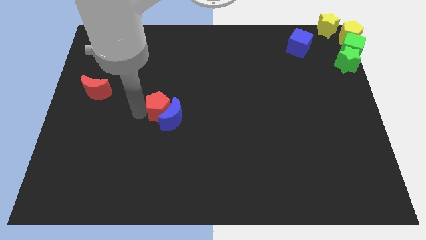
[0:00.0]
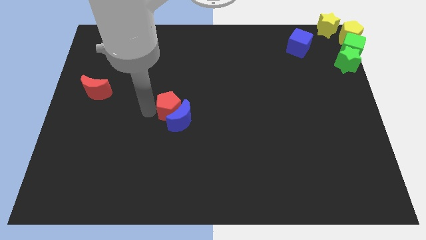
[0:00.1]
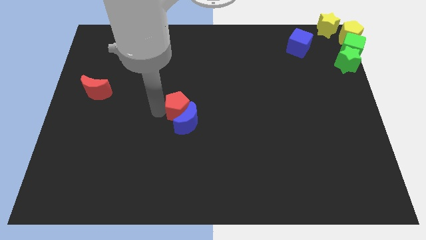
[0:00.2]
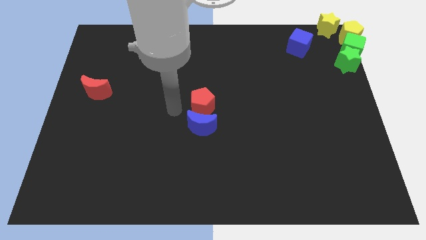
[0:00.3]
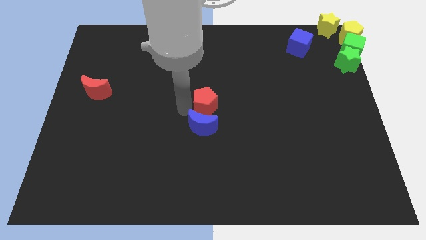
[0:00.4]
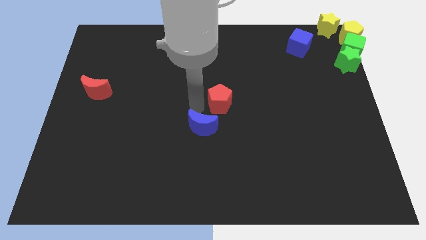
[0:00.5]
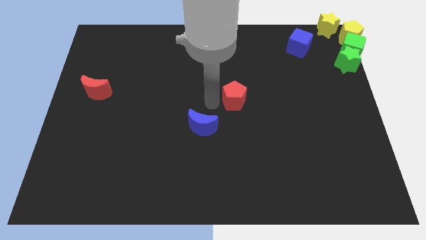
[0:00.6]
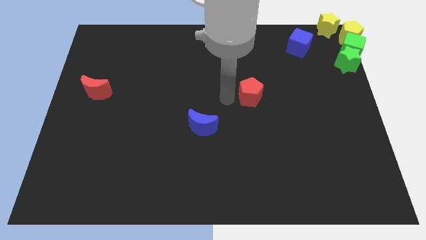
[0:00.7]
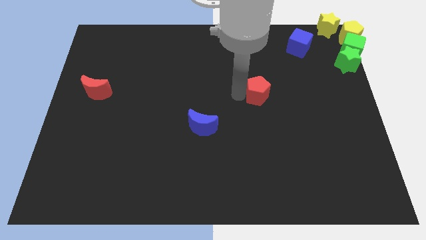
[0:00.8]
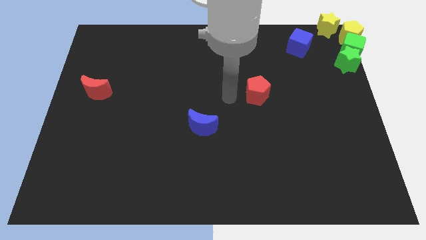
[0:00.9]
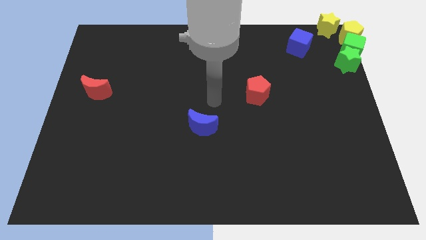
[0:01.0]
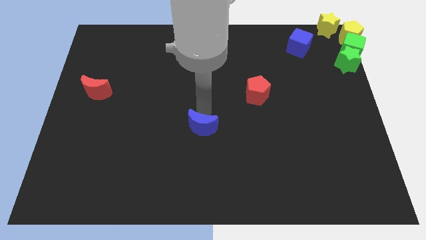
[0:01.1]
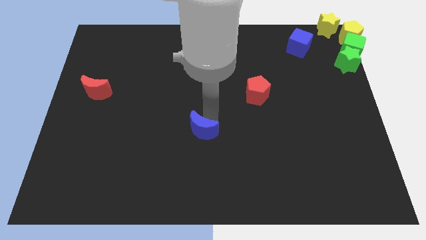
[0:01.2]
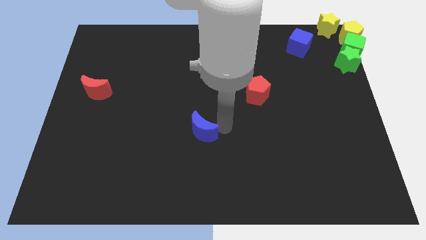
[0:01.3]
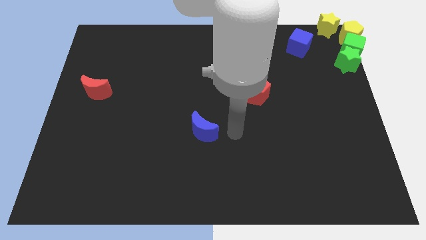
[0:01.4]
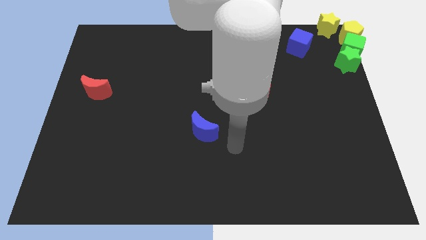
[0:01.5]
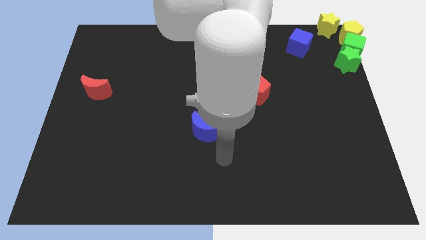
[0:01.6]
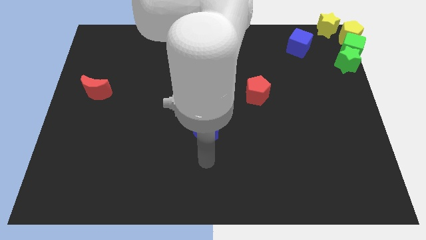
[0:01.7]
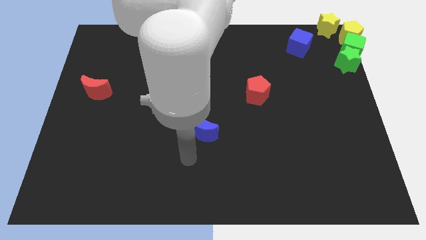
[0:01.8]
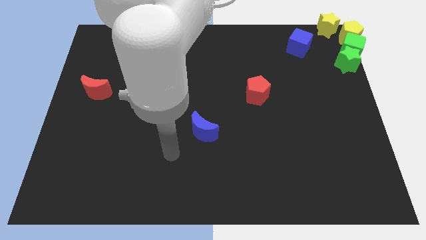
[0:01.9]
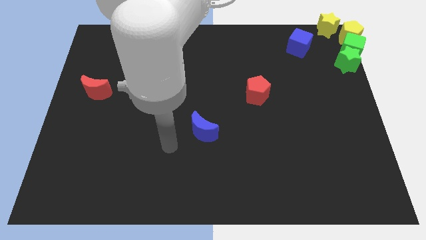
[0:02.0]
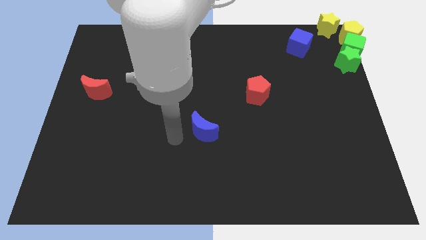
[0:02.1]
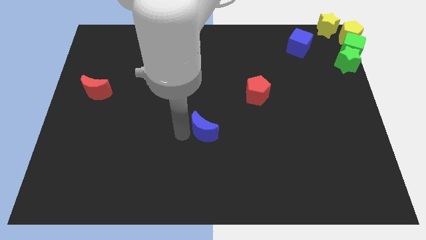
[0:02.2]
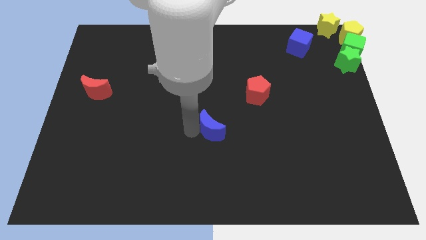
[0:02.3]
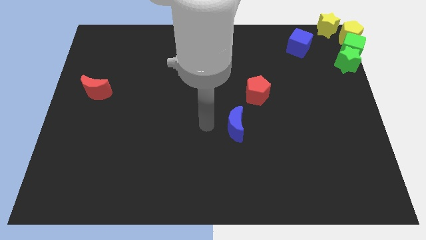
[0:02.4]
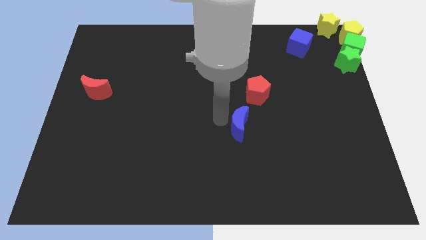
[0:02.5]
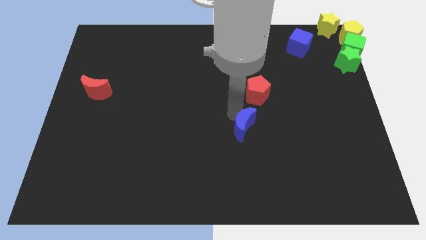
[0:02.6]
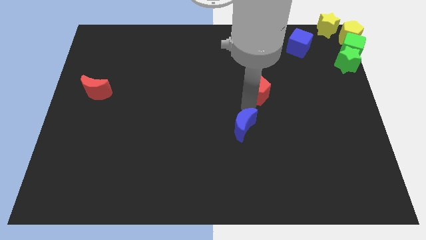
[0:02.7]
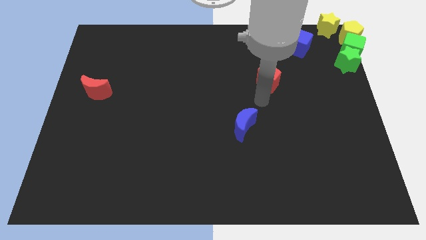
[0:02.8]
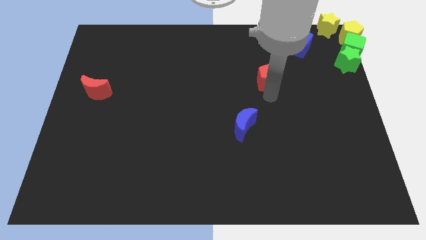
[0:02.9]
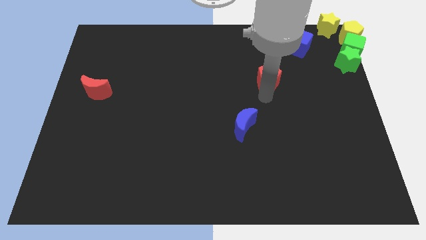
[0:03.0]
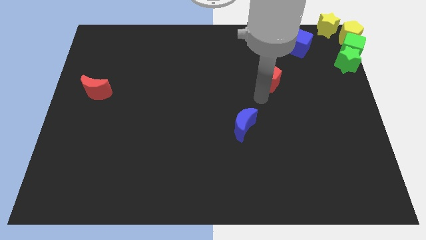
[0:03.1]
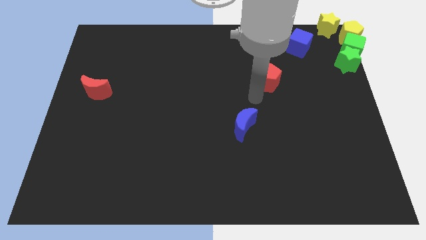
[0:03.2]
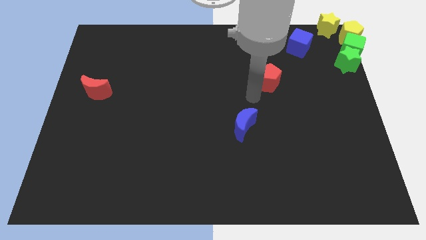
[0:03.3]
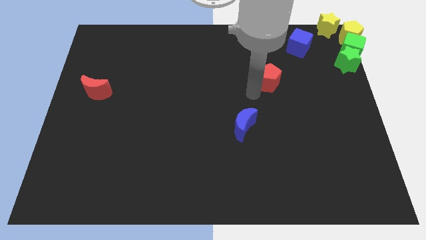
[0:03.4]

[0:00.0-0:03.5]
separate the red pentagon and blue crescent

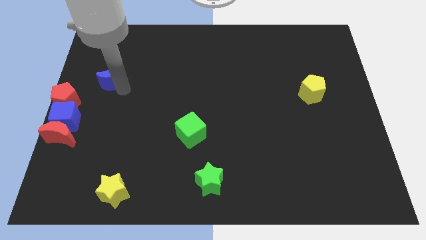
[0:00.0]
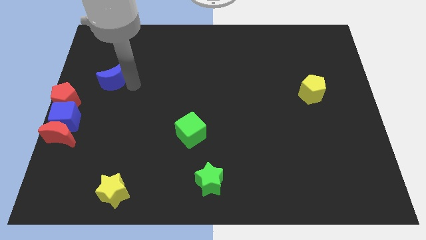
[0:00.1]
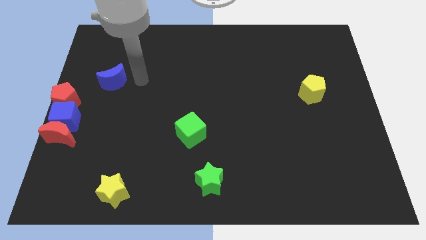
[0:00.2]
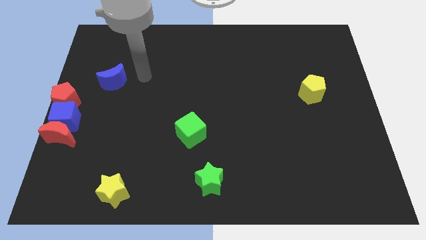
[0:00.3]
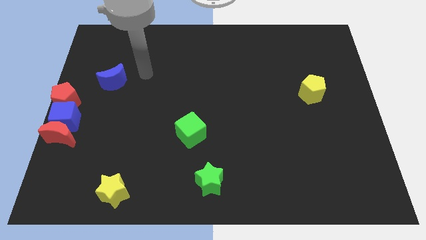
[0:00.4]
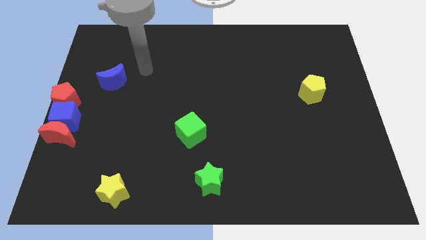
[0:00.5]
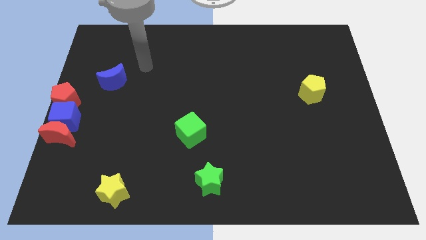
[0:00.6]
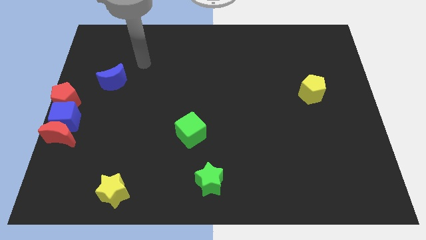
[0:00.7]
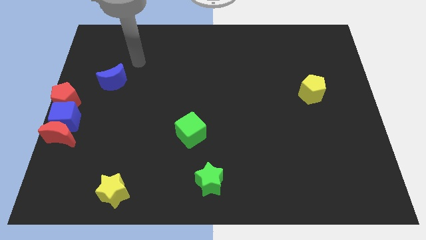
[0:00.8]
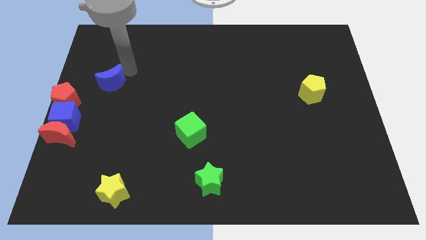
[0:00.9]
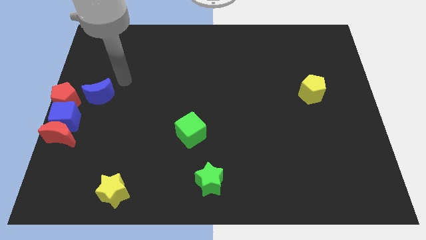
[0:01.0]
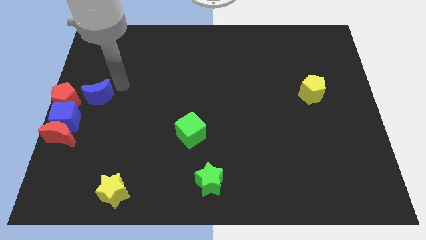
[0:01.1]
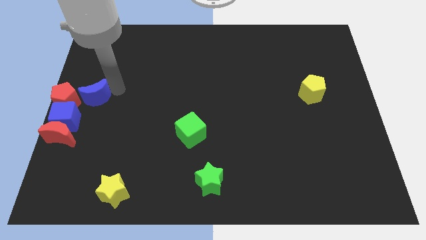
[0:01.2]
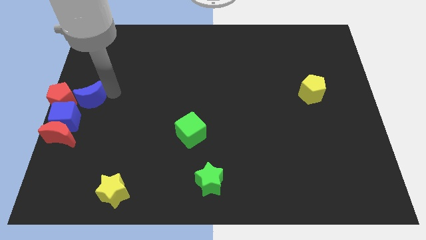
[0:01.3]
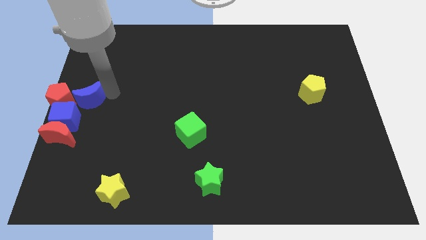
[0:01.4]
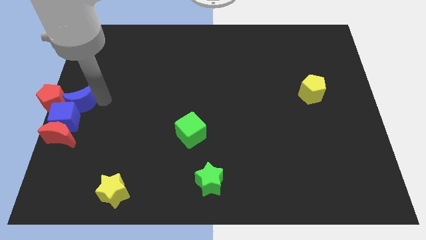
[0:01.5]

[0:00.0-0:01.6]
move blue moon into red pentagon

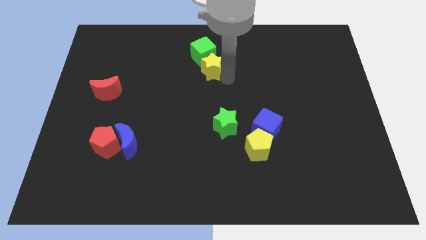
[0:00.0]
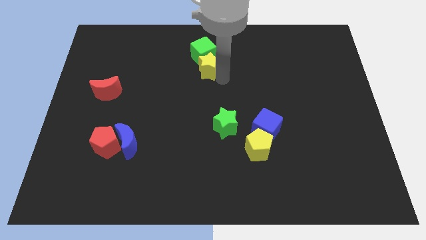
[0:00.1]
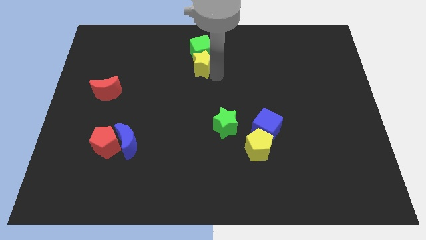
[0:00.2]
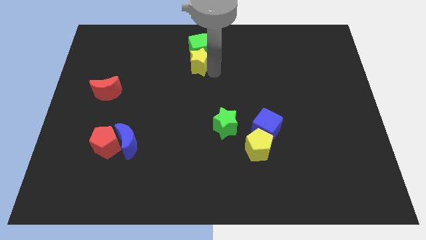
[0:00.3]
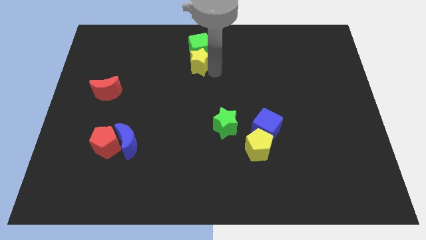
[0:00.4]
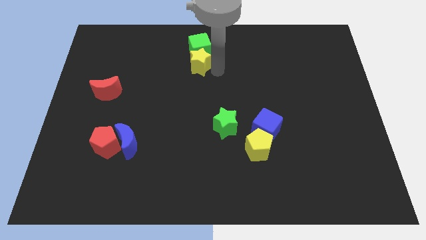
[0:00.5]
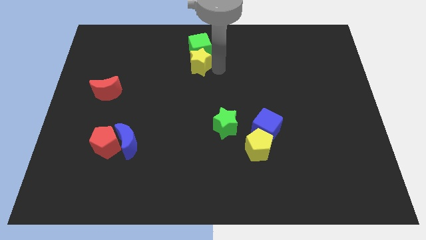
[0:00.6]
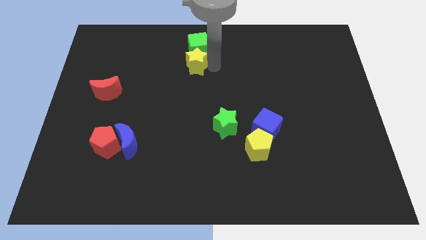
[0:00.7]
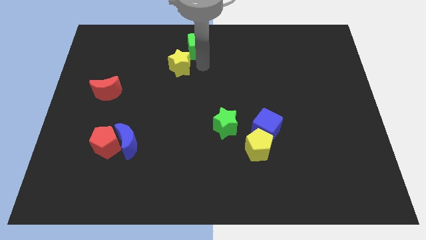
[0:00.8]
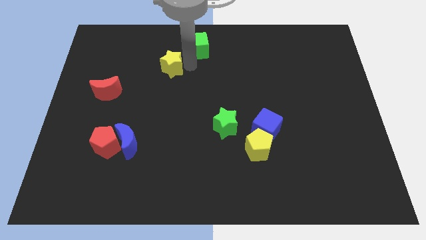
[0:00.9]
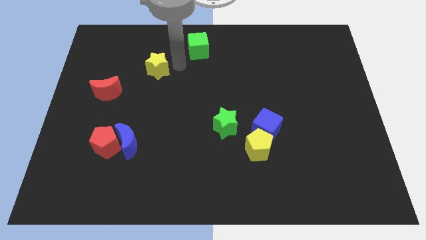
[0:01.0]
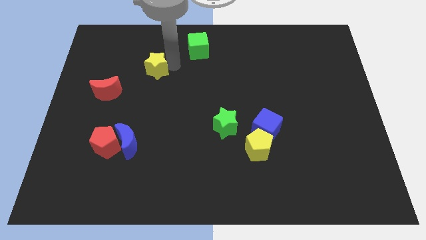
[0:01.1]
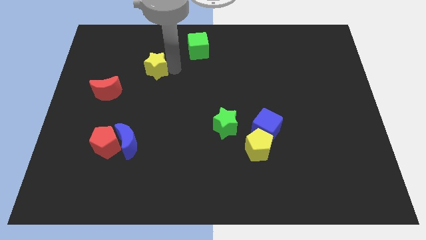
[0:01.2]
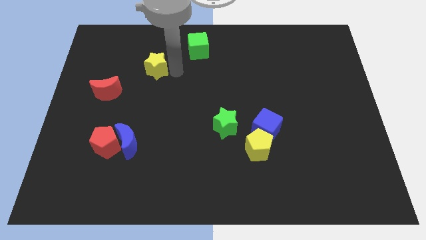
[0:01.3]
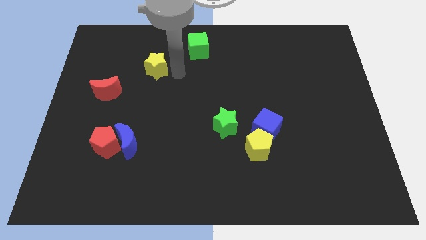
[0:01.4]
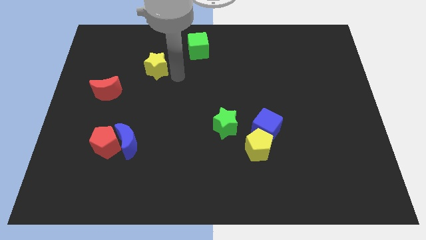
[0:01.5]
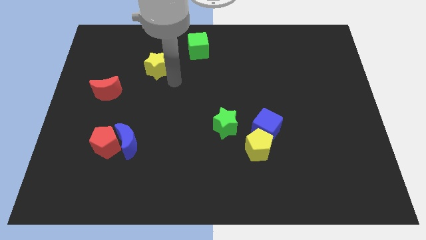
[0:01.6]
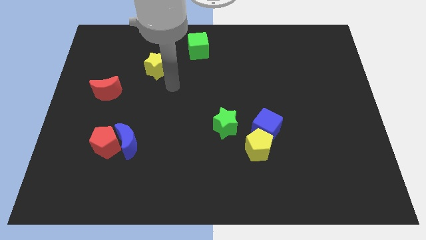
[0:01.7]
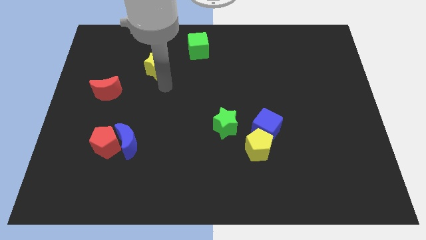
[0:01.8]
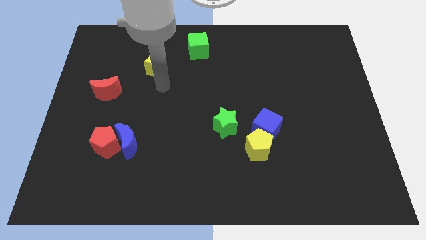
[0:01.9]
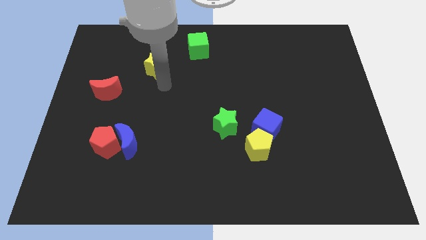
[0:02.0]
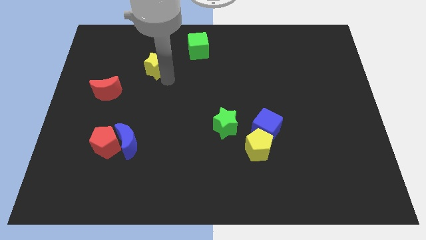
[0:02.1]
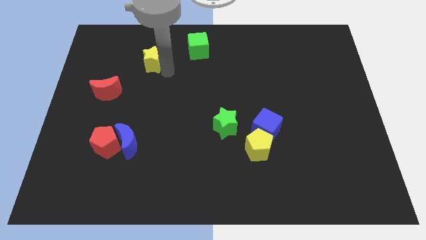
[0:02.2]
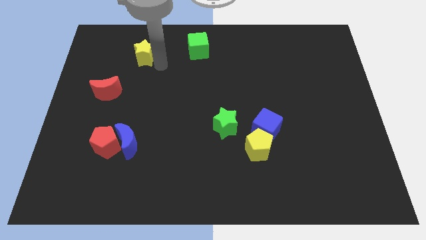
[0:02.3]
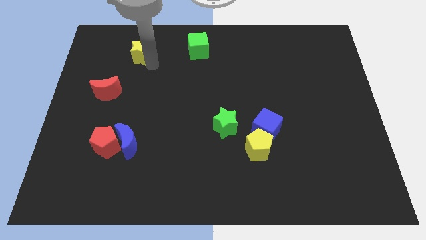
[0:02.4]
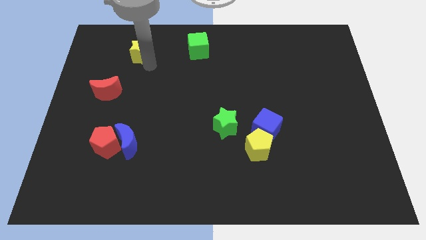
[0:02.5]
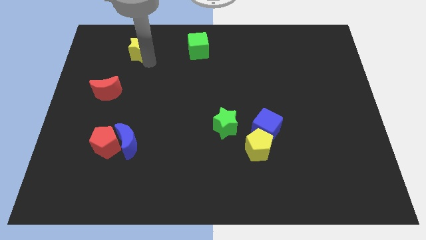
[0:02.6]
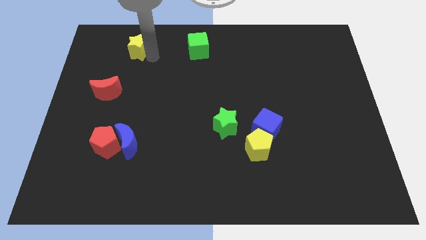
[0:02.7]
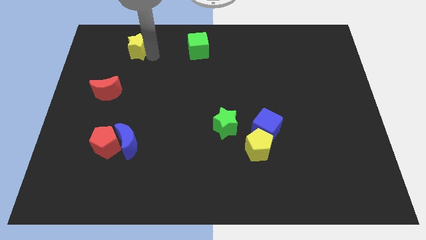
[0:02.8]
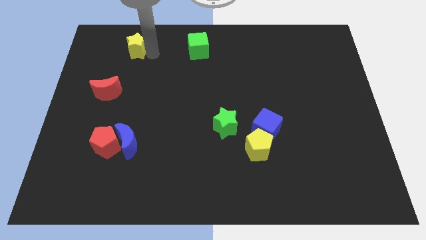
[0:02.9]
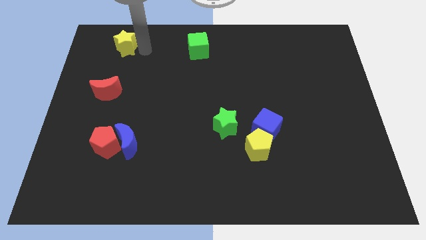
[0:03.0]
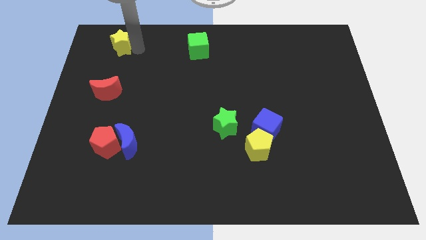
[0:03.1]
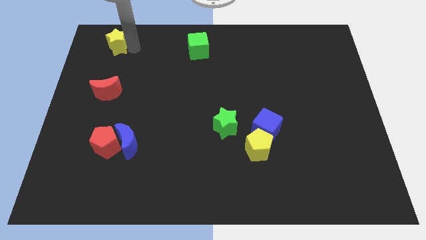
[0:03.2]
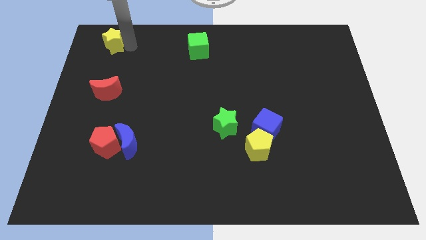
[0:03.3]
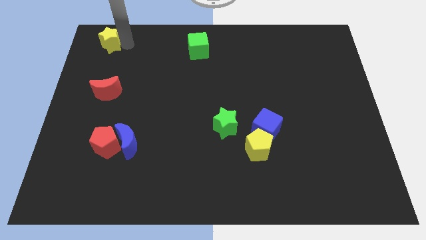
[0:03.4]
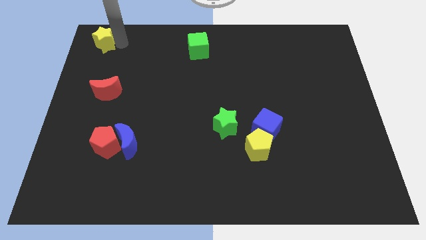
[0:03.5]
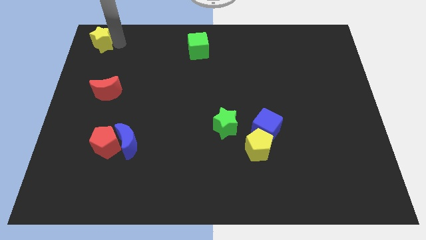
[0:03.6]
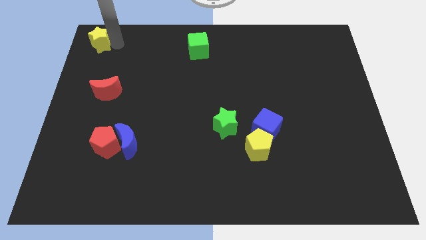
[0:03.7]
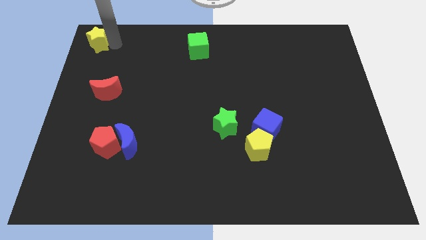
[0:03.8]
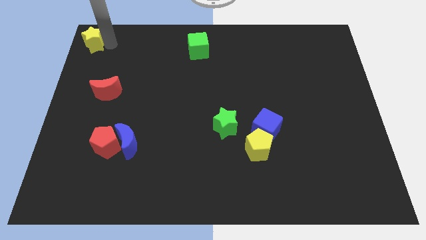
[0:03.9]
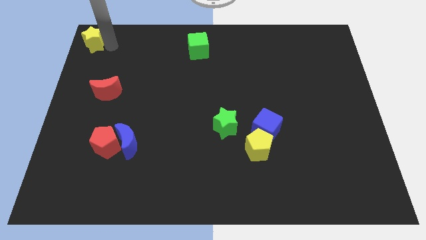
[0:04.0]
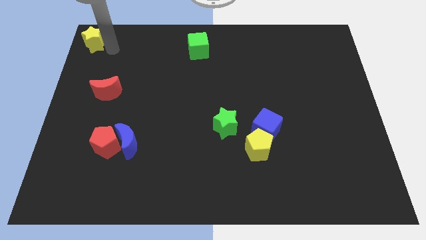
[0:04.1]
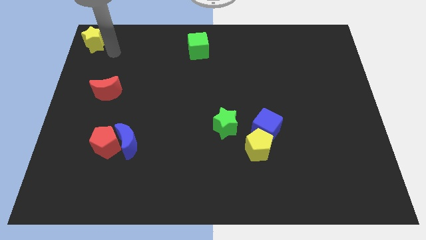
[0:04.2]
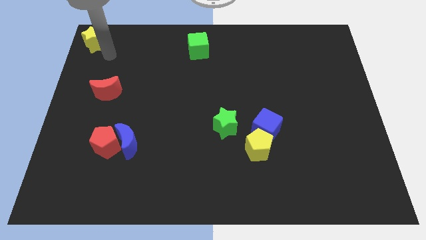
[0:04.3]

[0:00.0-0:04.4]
separate yellow star from the green cube
